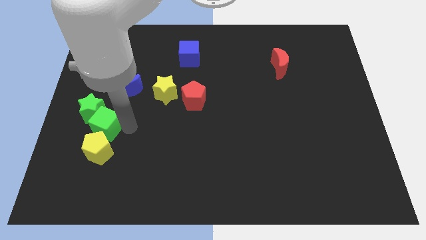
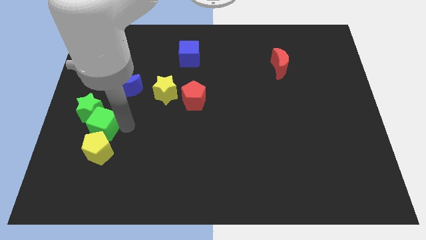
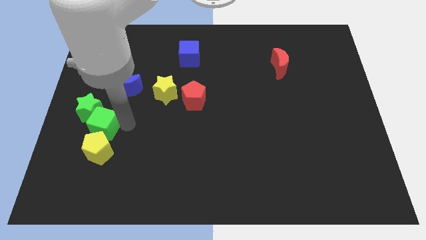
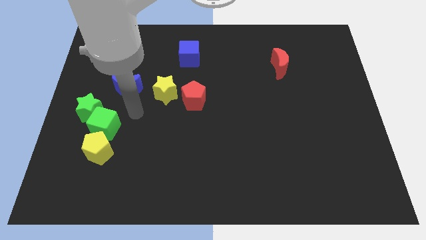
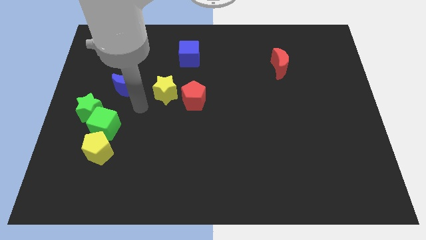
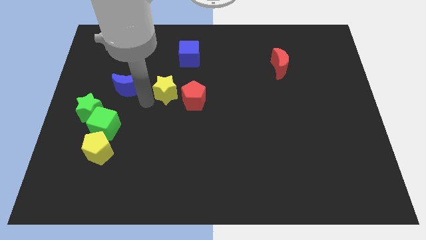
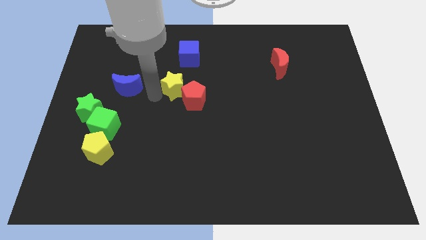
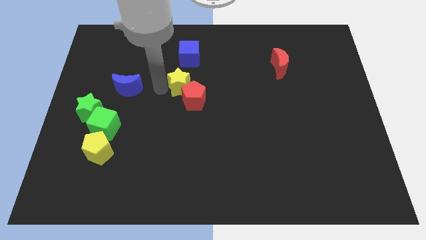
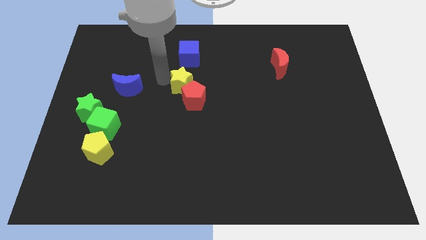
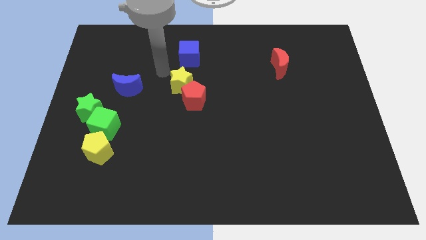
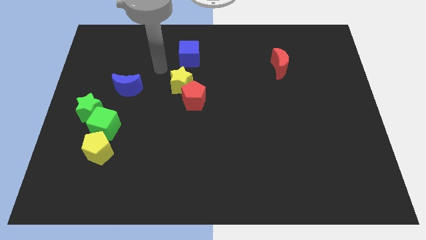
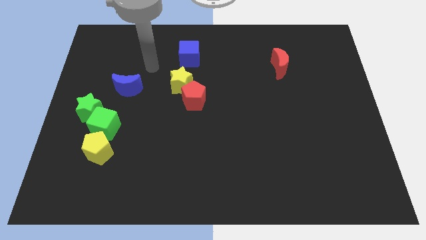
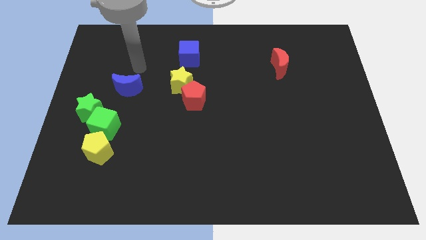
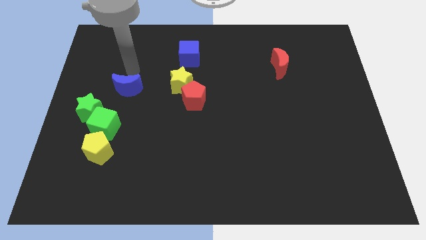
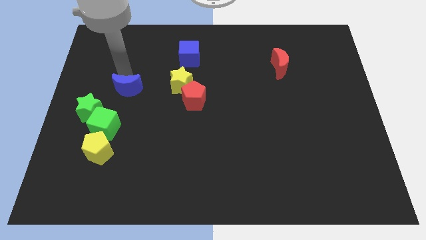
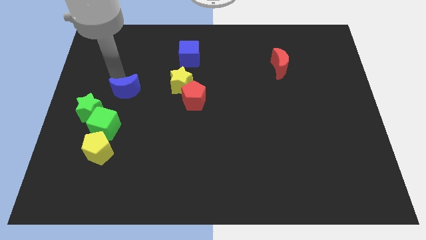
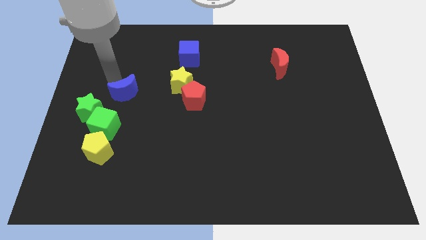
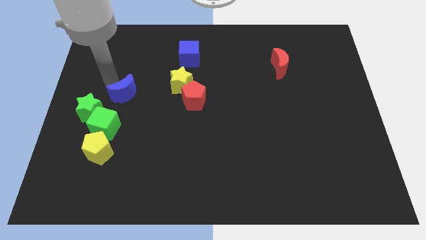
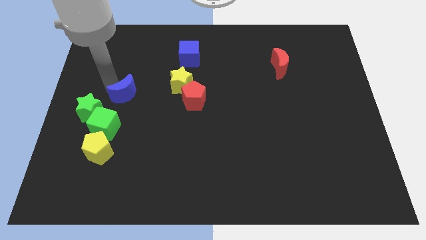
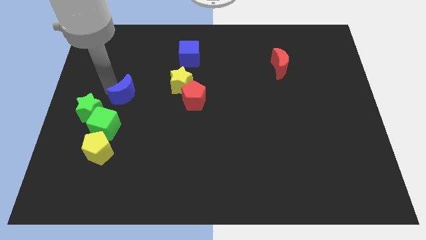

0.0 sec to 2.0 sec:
go near blue moon

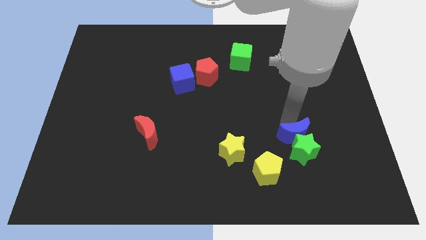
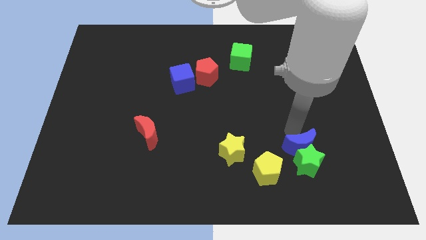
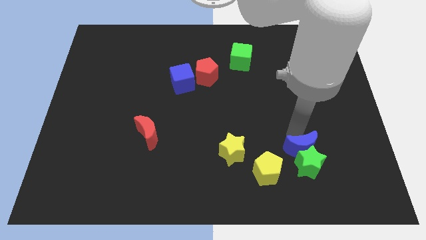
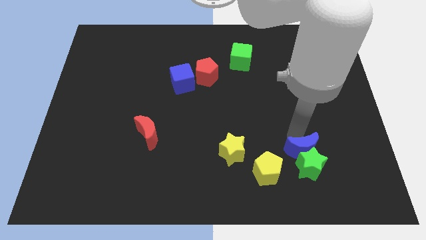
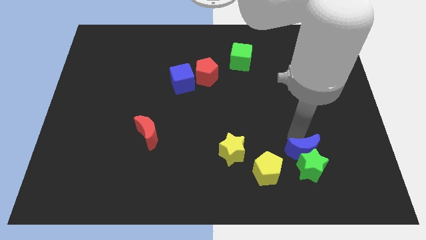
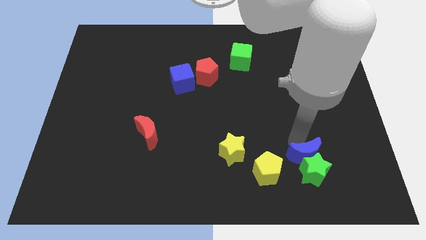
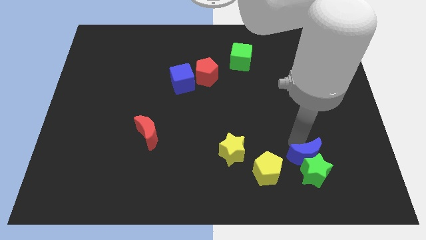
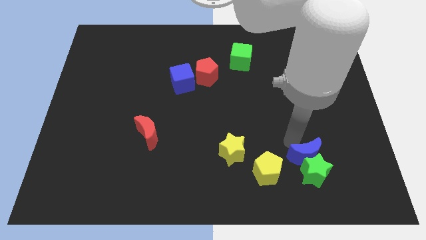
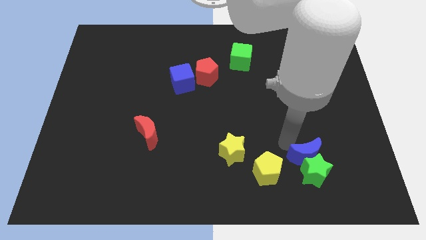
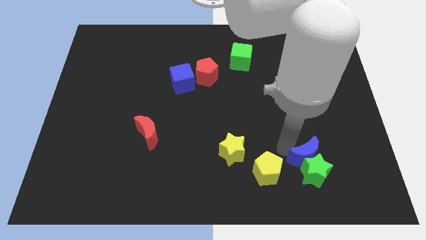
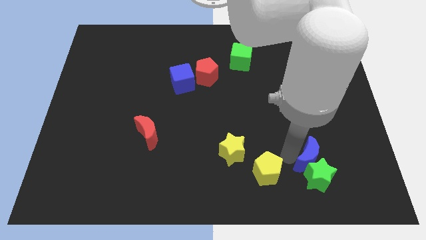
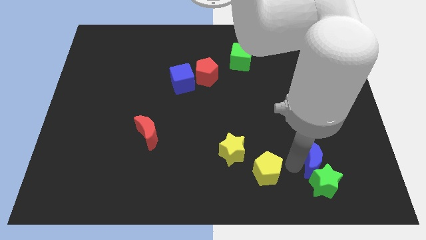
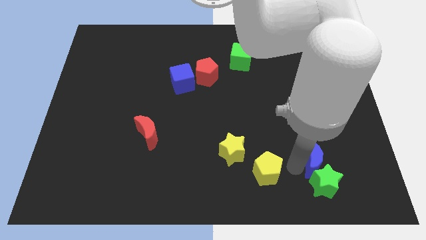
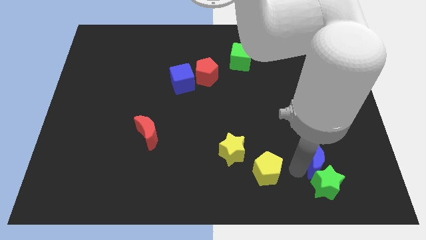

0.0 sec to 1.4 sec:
slide the green star and the blue moon towards the bottom right

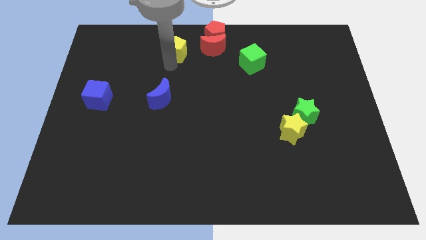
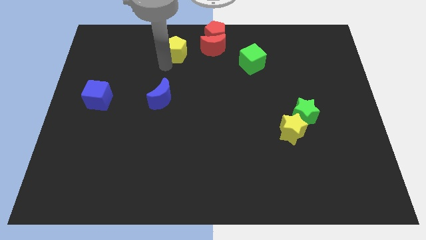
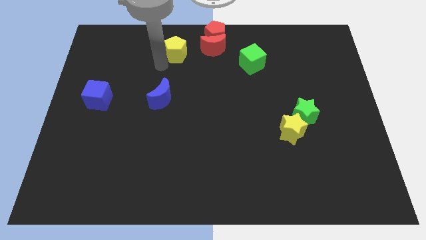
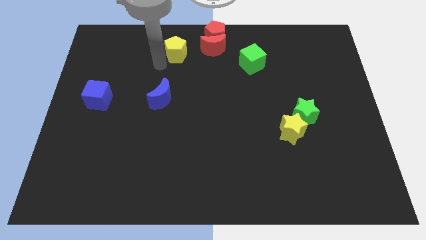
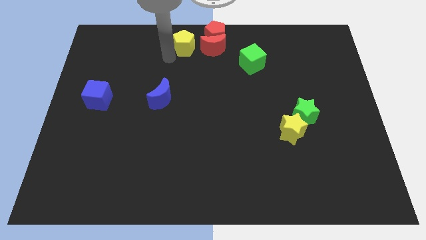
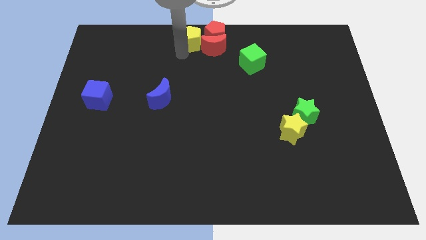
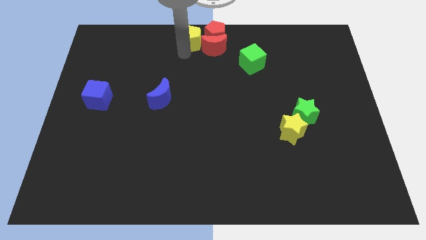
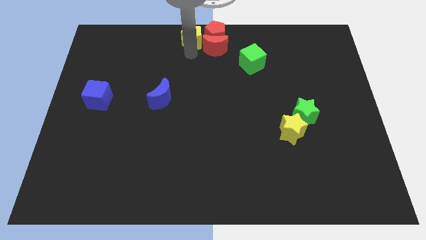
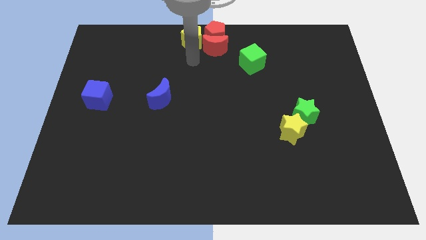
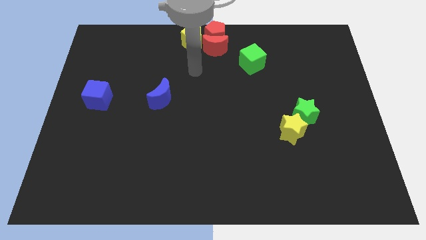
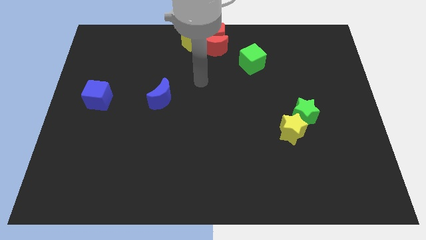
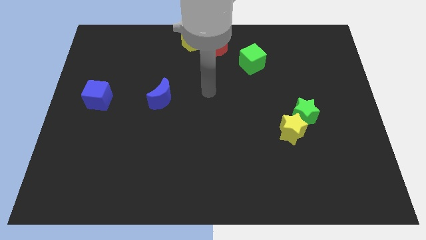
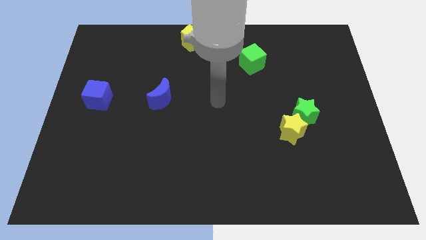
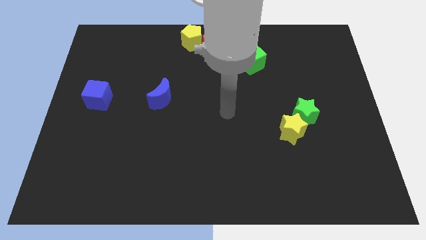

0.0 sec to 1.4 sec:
push yellow pentagon towards the red crescent

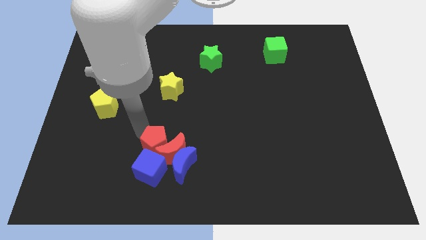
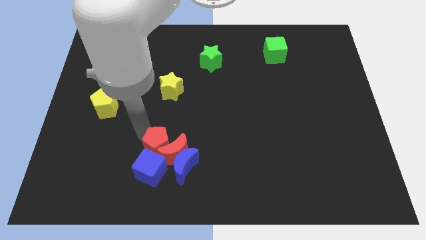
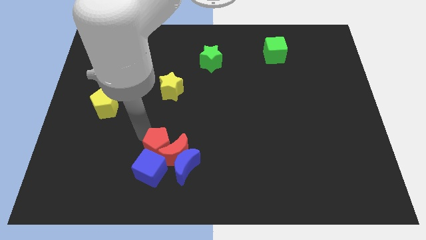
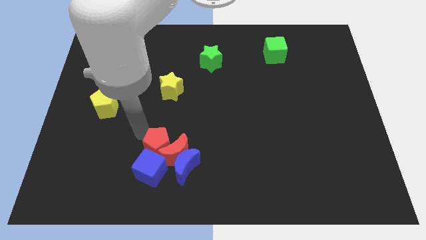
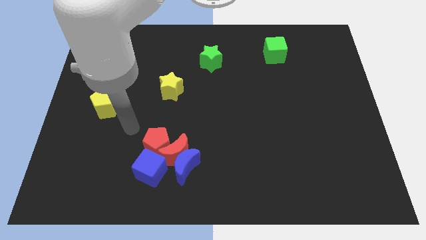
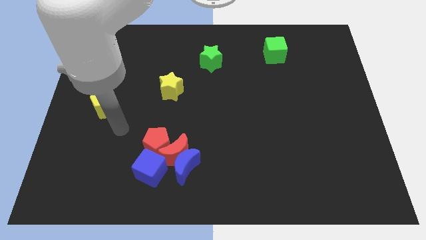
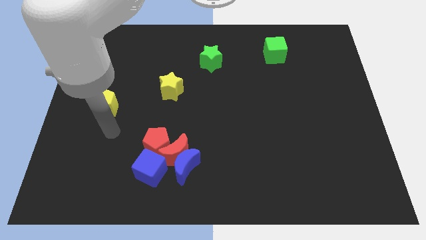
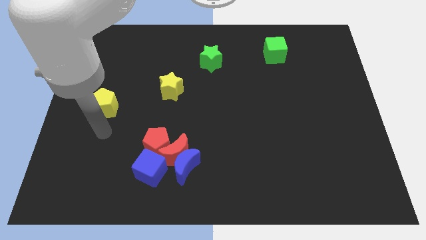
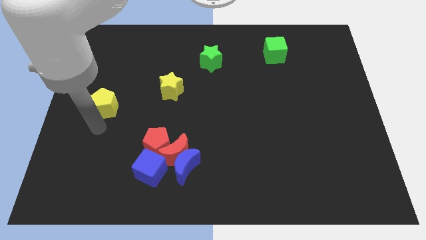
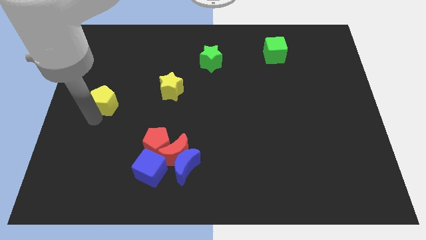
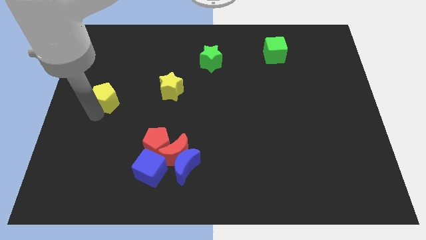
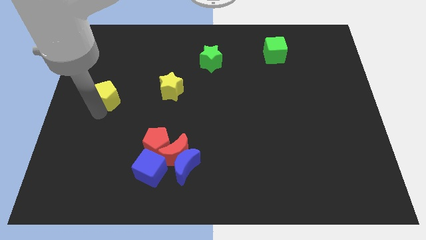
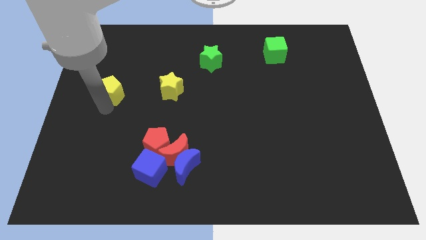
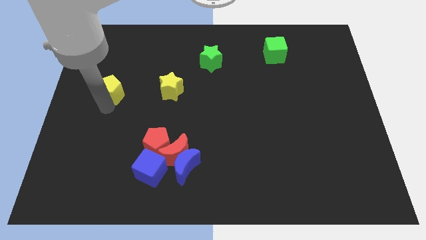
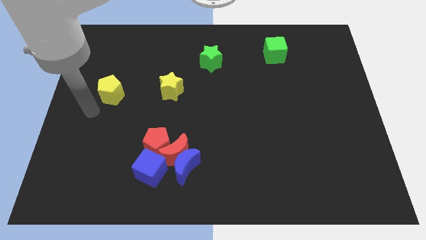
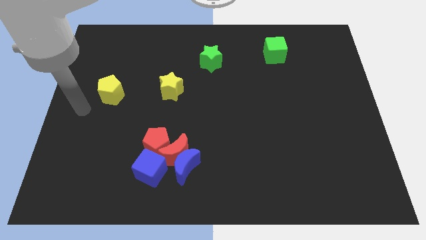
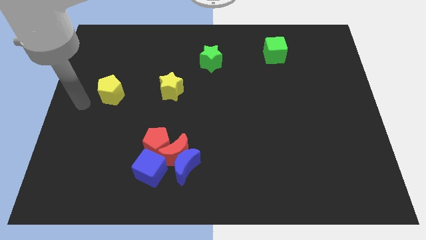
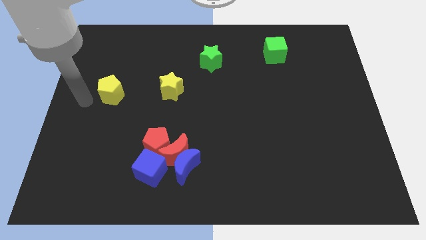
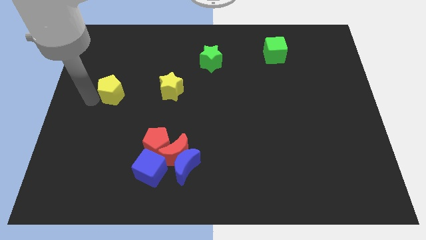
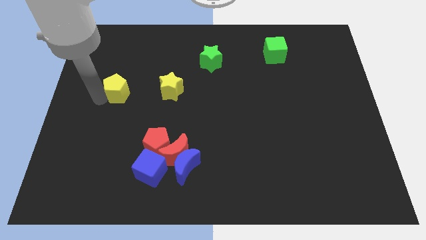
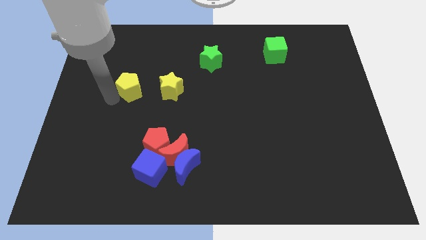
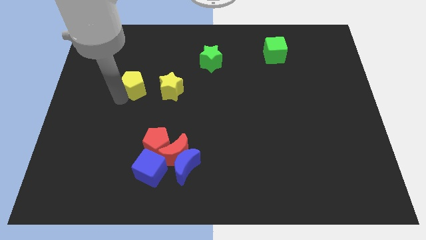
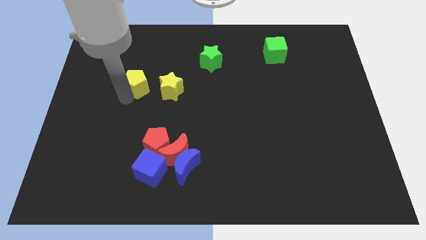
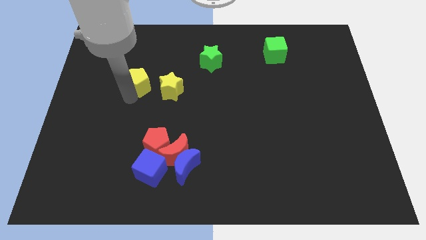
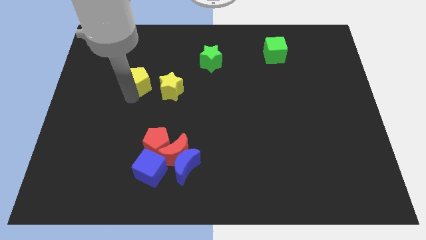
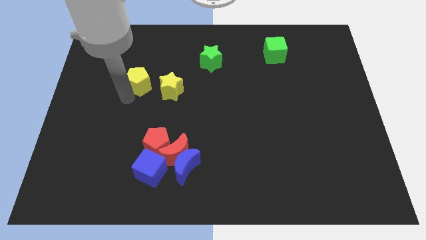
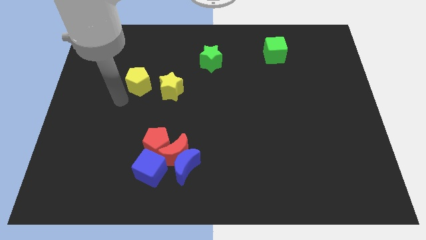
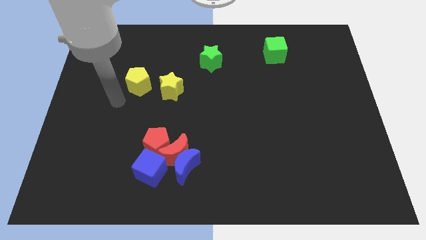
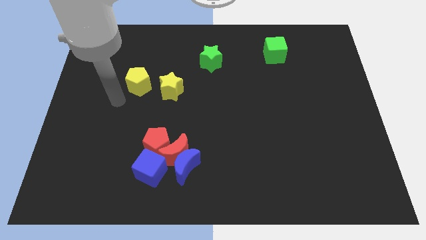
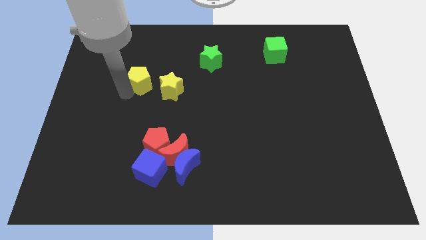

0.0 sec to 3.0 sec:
move the yellow pentagon left to the yellow star

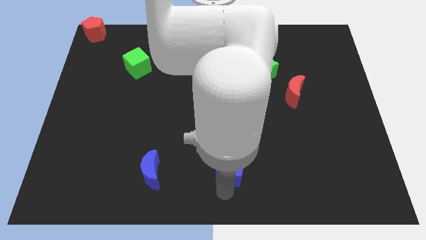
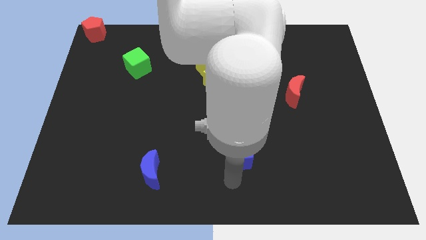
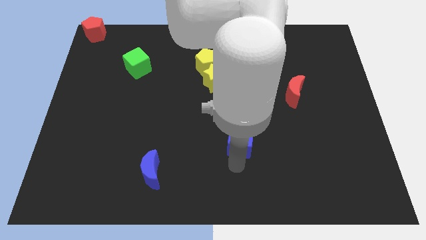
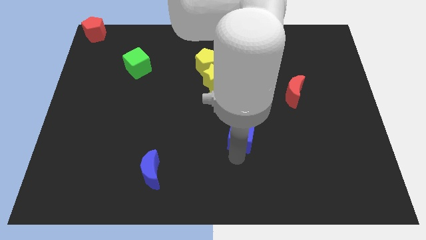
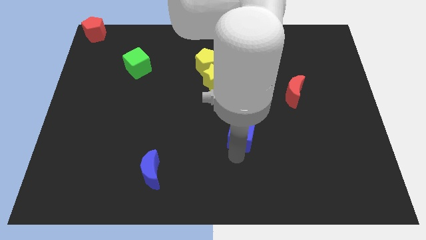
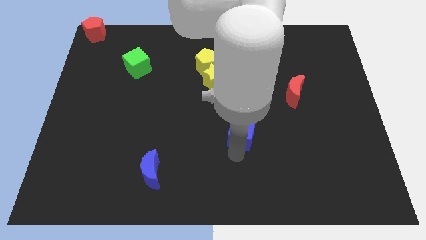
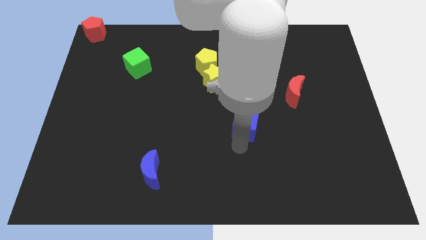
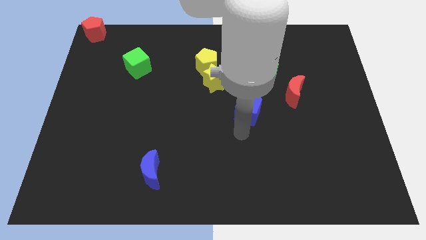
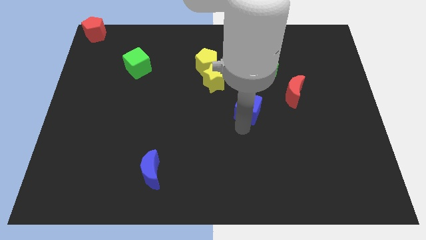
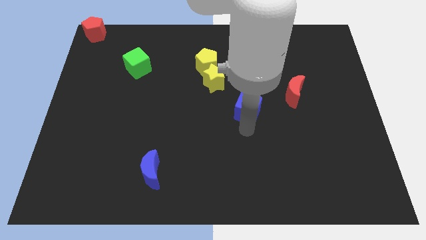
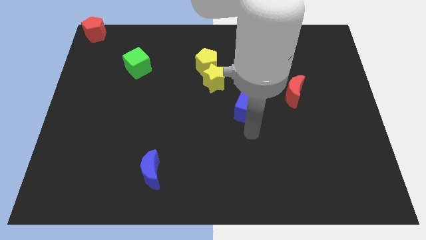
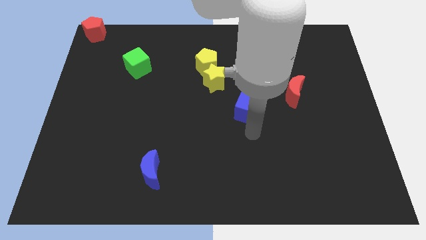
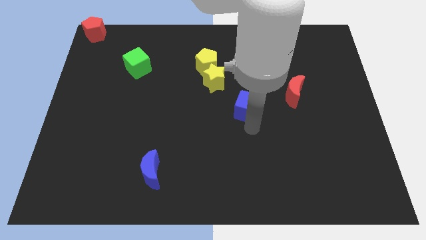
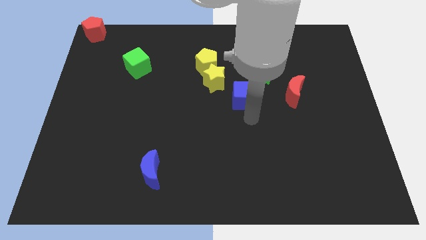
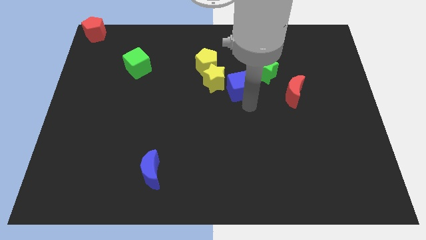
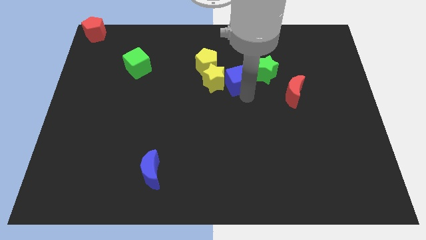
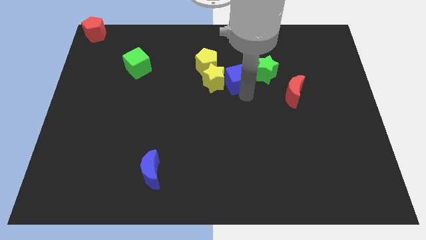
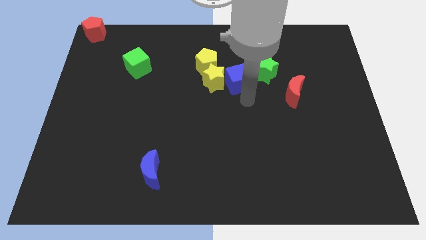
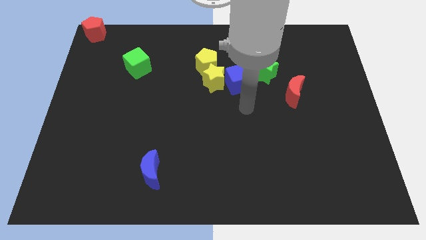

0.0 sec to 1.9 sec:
push the blue cube to the right side of the yellow star
